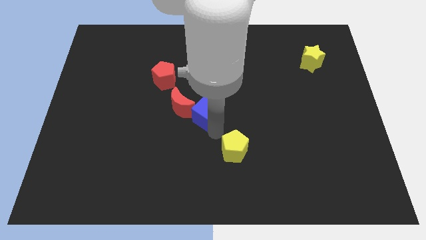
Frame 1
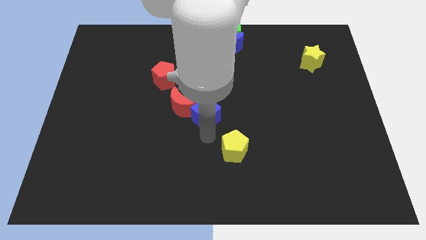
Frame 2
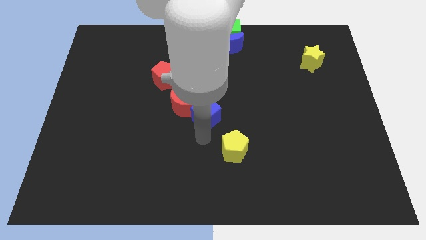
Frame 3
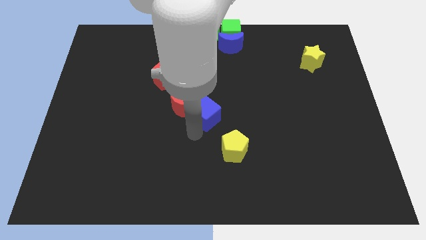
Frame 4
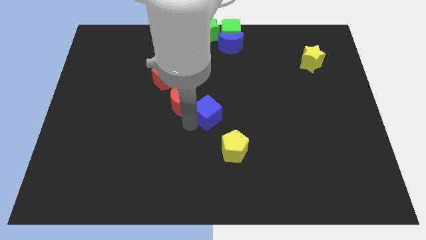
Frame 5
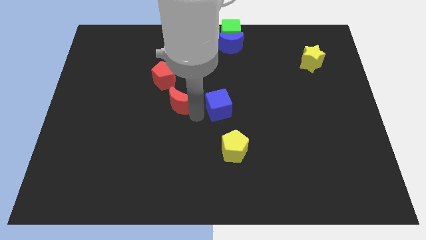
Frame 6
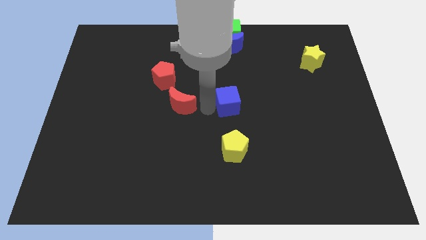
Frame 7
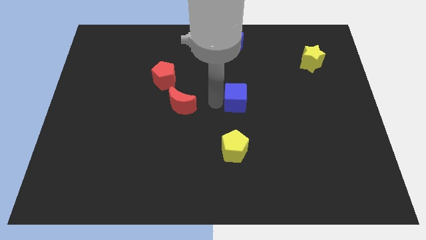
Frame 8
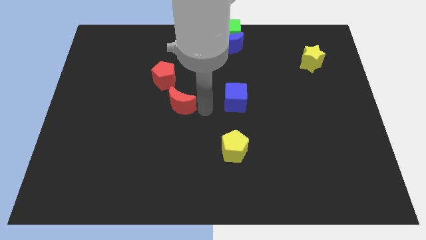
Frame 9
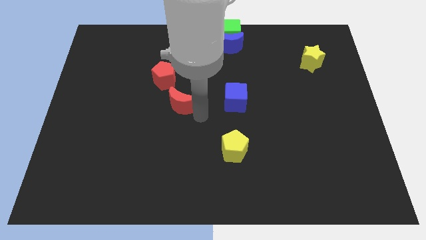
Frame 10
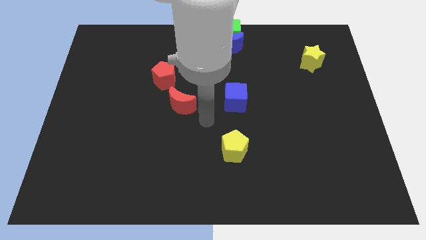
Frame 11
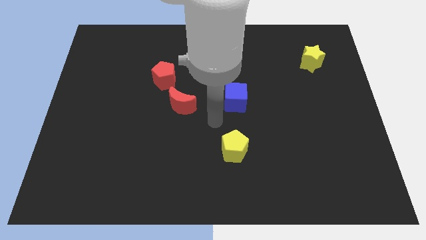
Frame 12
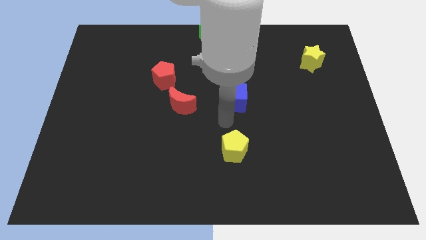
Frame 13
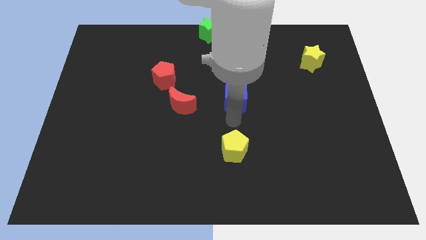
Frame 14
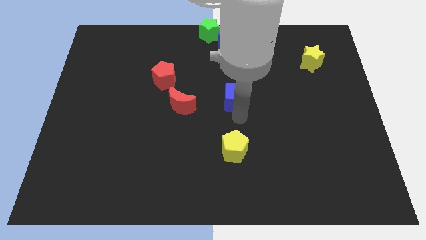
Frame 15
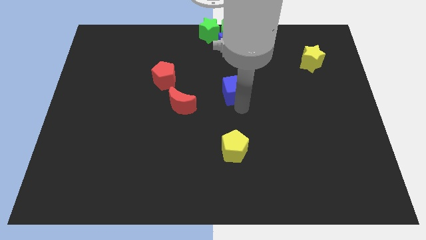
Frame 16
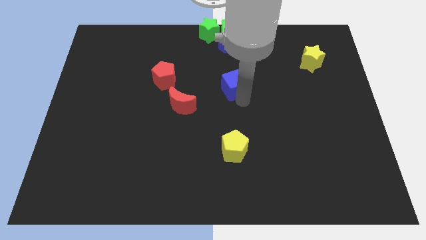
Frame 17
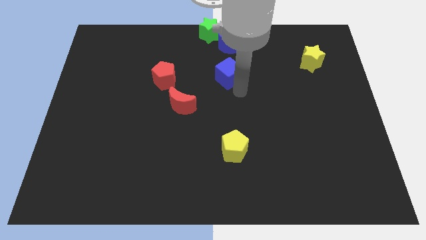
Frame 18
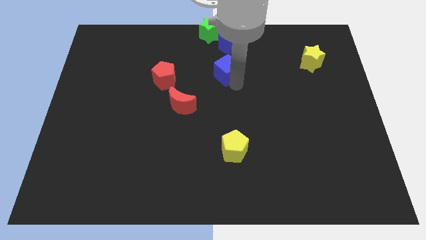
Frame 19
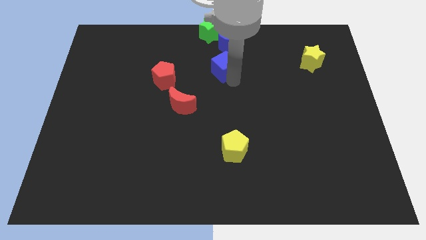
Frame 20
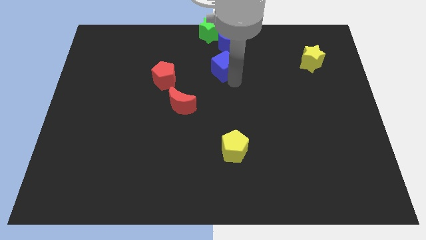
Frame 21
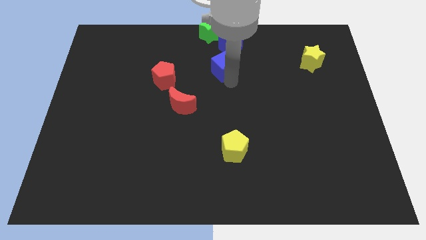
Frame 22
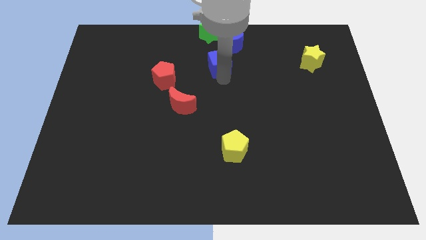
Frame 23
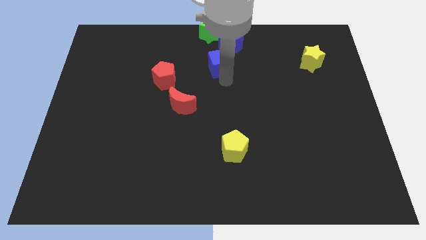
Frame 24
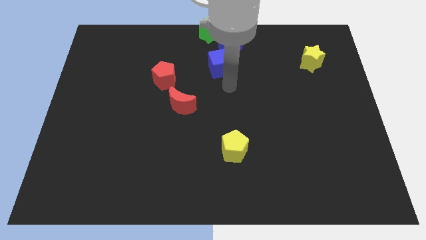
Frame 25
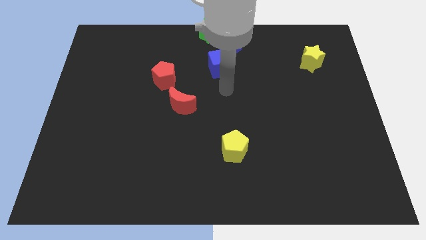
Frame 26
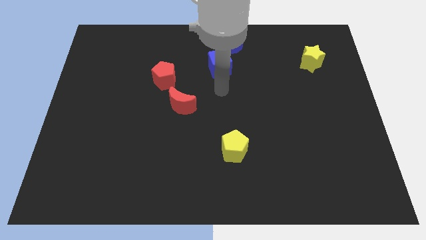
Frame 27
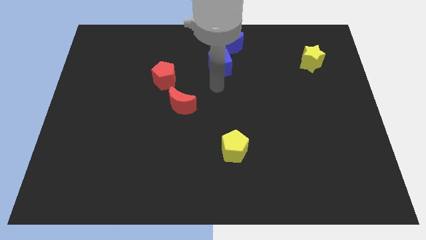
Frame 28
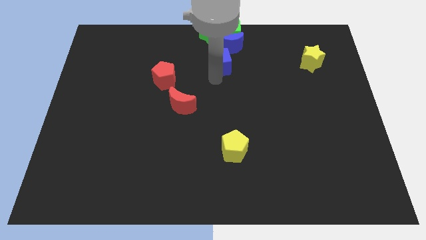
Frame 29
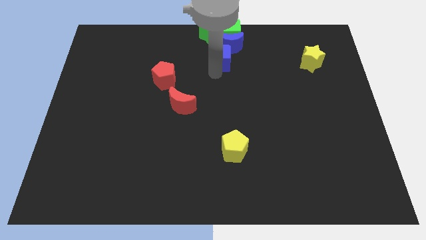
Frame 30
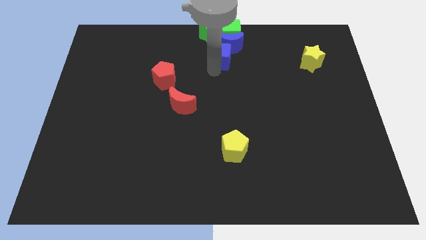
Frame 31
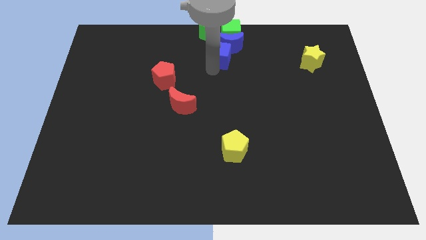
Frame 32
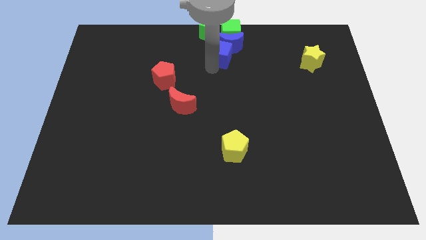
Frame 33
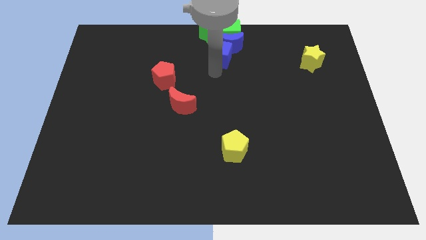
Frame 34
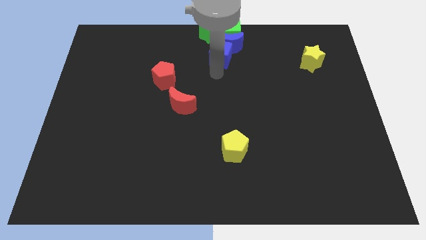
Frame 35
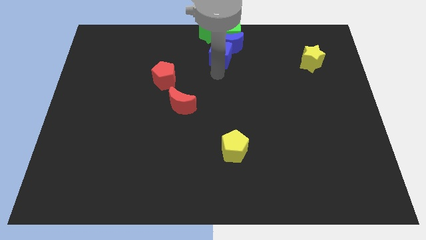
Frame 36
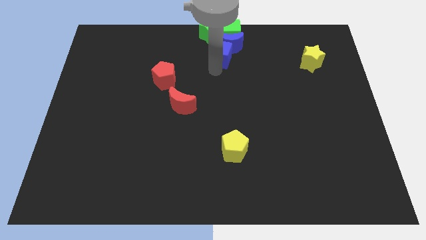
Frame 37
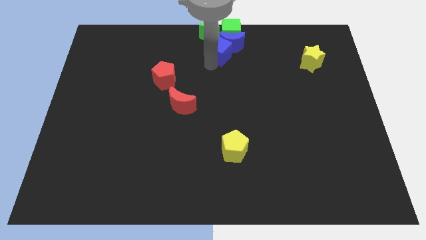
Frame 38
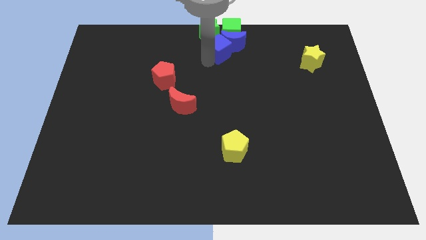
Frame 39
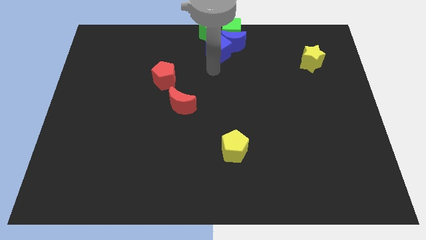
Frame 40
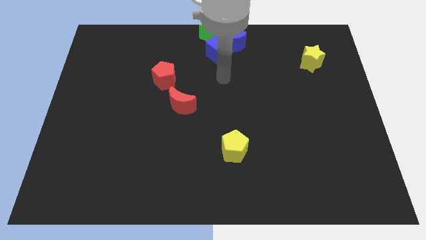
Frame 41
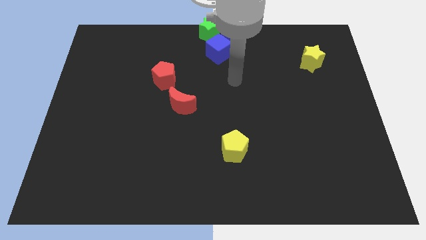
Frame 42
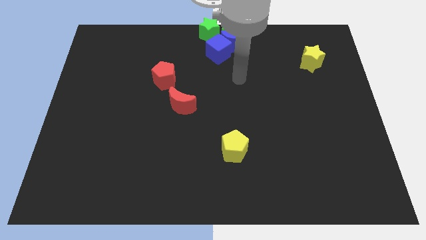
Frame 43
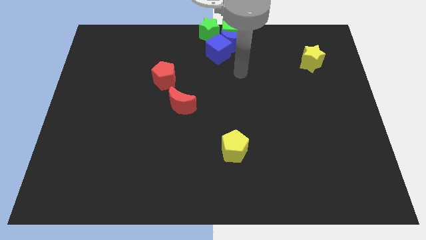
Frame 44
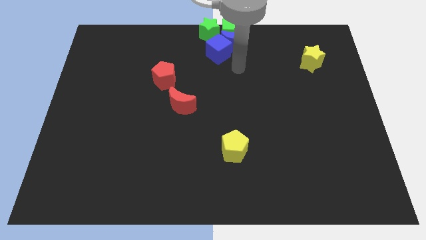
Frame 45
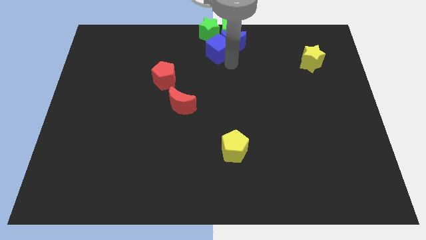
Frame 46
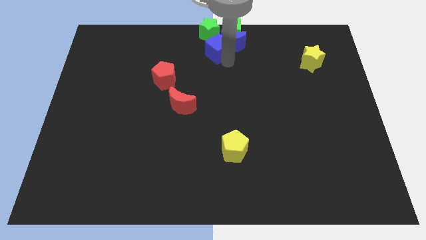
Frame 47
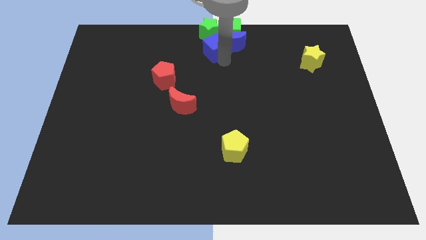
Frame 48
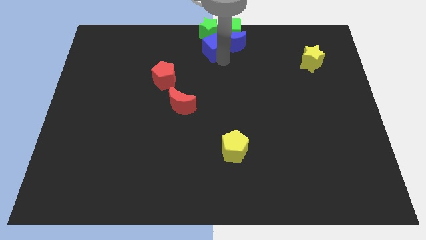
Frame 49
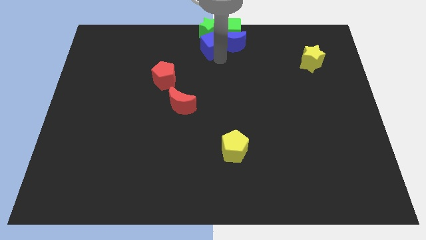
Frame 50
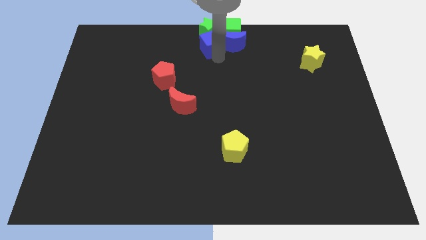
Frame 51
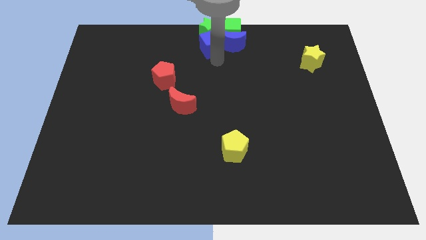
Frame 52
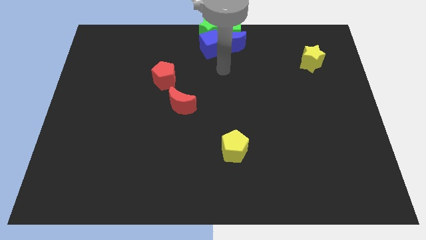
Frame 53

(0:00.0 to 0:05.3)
place the blue cube towards the bottom of the green star

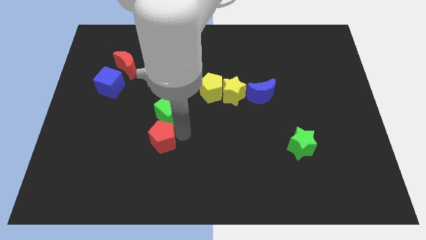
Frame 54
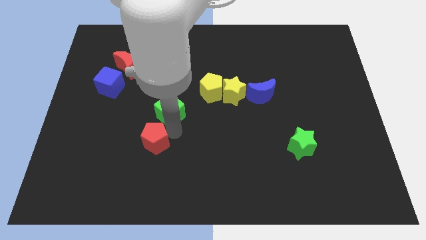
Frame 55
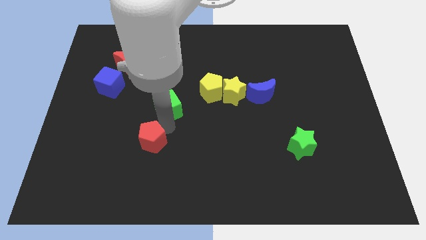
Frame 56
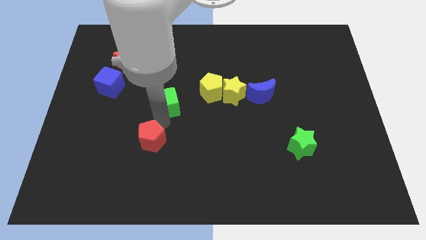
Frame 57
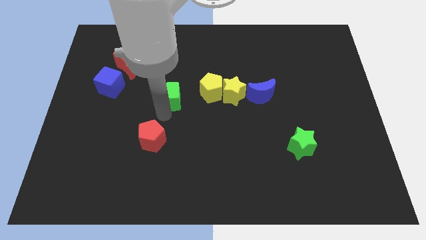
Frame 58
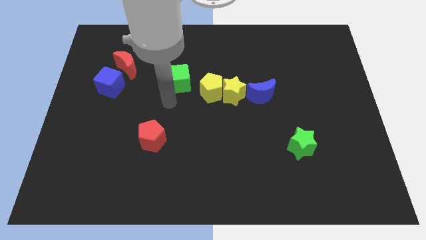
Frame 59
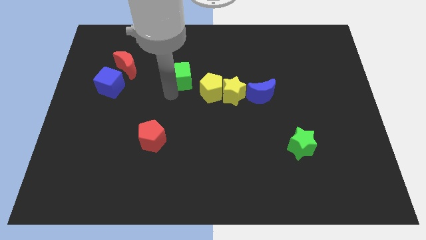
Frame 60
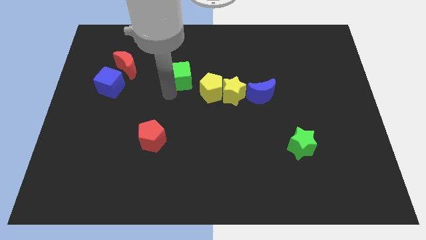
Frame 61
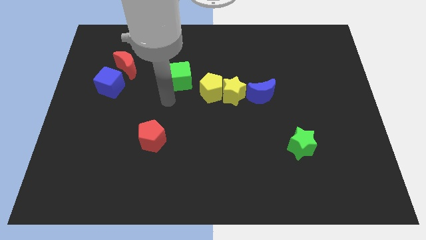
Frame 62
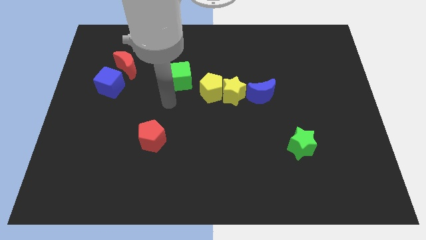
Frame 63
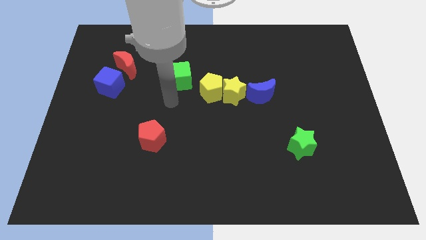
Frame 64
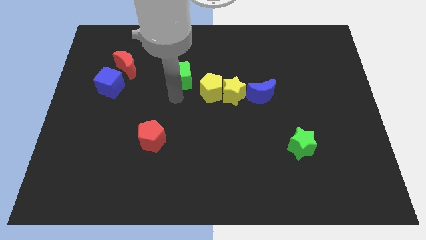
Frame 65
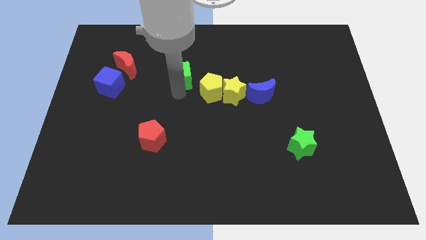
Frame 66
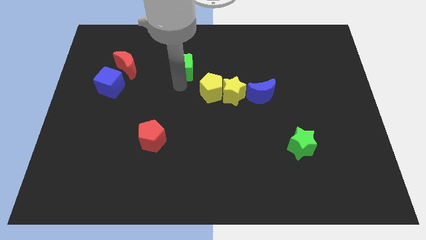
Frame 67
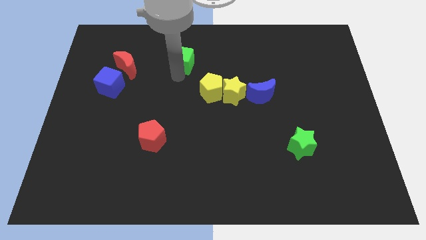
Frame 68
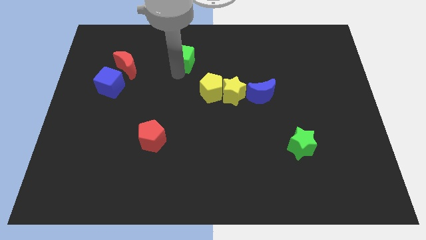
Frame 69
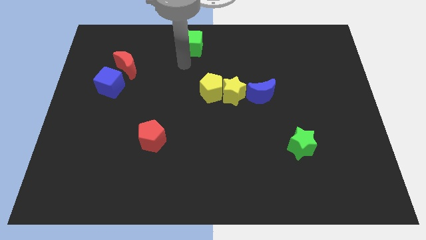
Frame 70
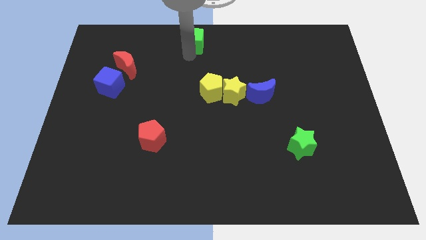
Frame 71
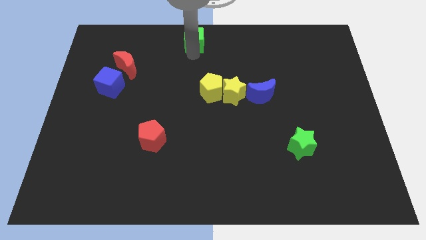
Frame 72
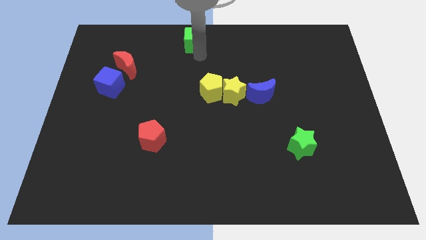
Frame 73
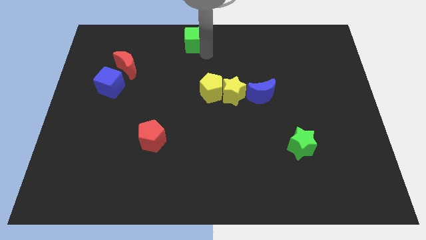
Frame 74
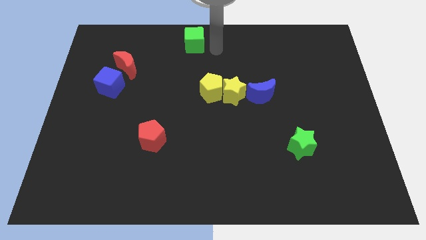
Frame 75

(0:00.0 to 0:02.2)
slide the green cube to the top side

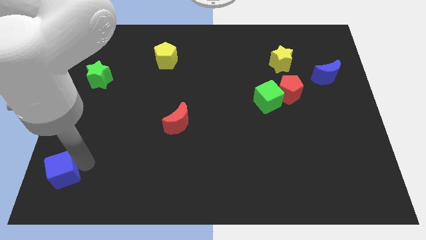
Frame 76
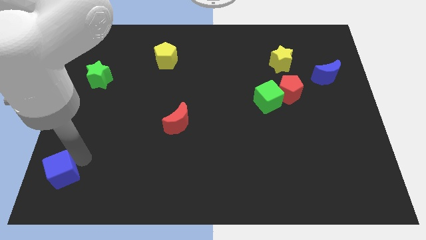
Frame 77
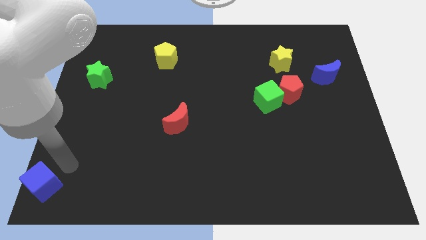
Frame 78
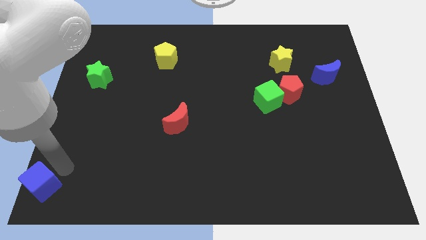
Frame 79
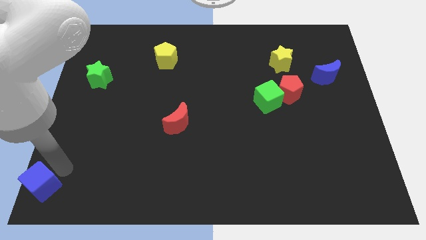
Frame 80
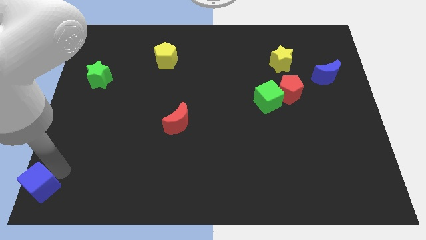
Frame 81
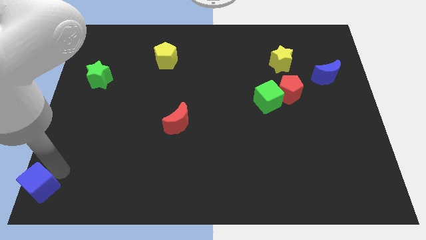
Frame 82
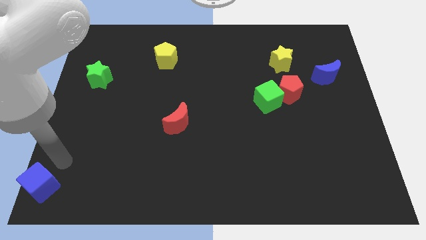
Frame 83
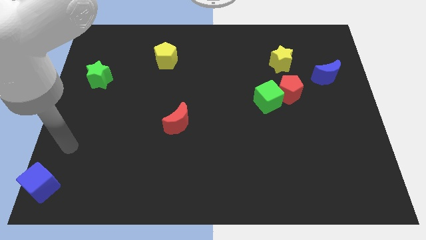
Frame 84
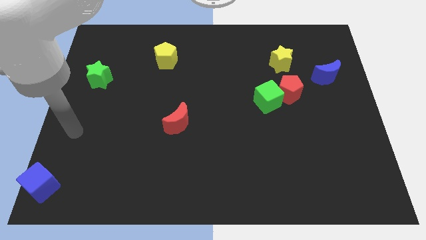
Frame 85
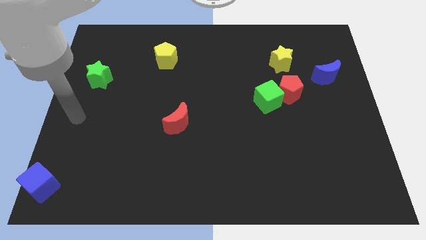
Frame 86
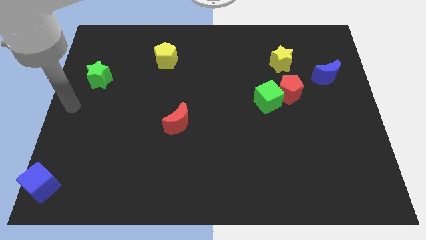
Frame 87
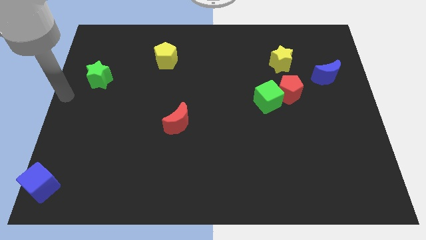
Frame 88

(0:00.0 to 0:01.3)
push blue cube towards bottom left corner of the board
